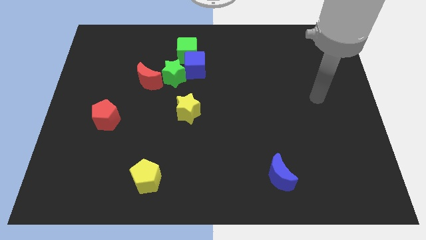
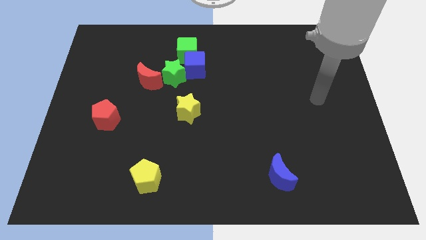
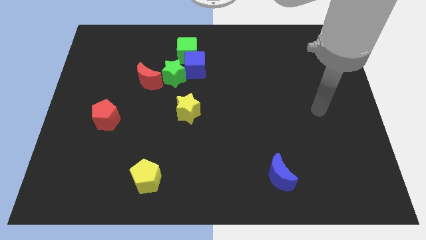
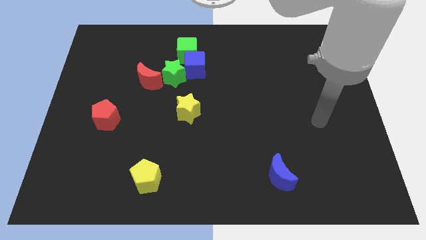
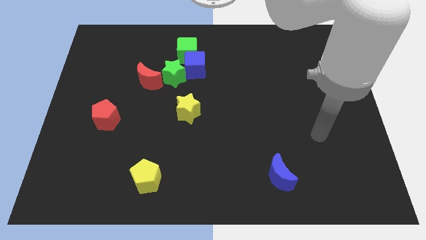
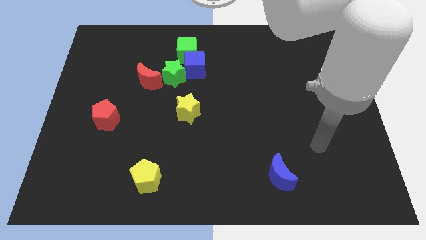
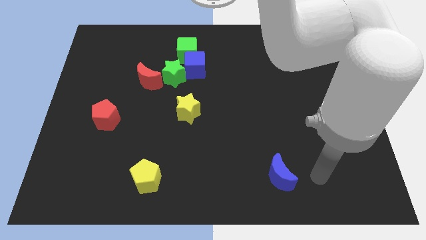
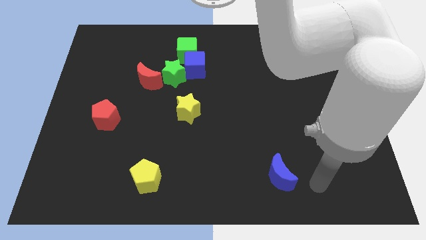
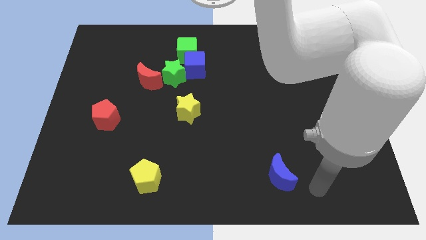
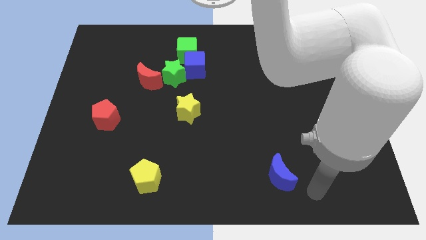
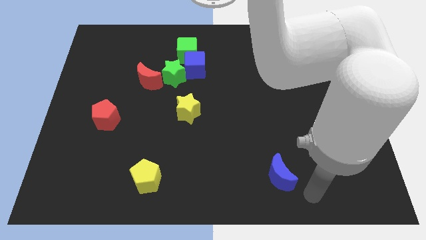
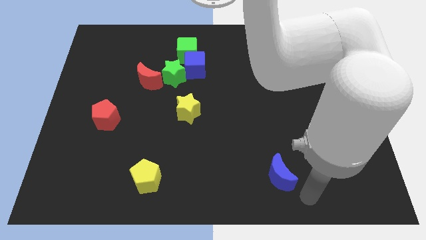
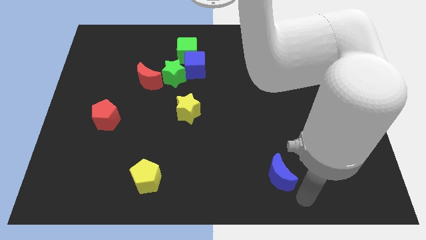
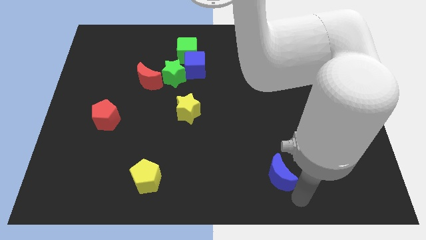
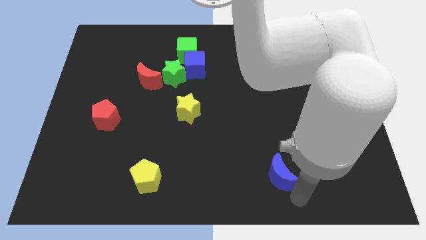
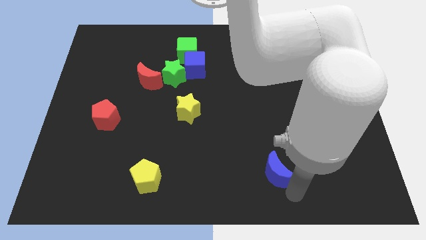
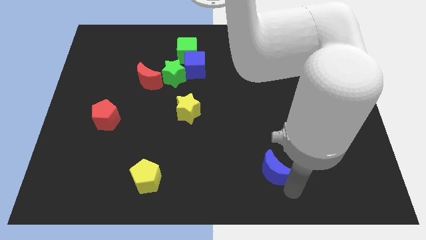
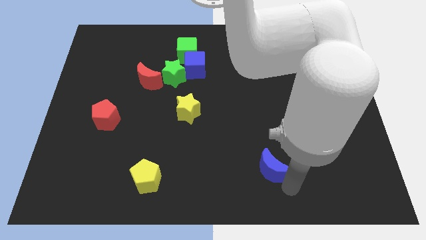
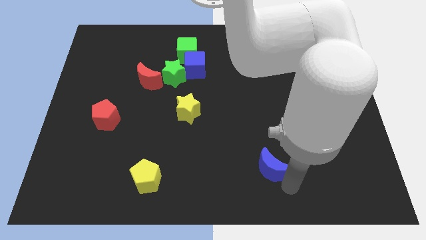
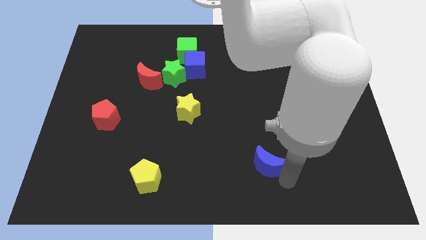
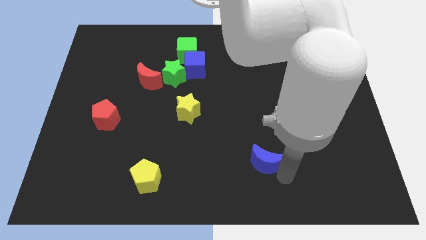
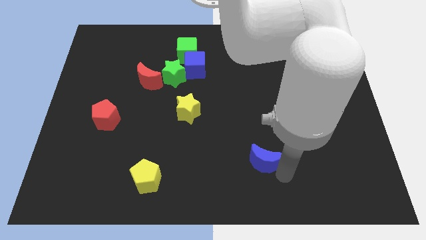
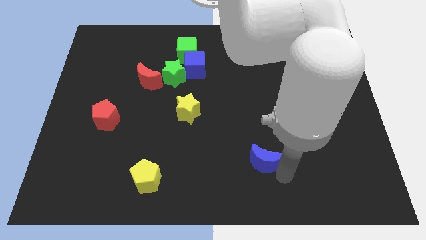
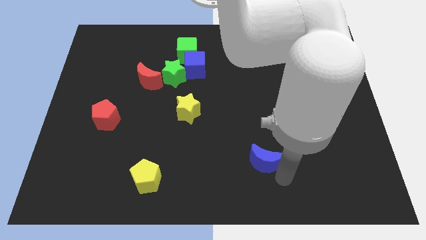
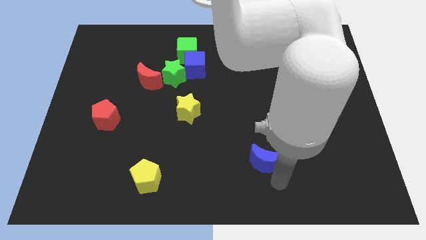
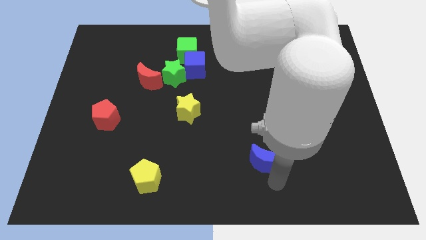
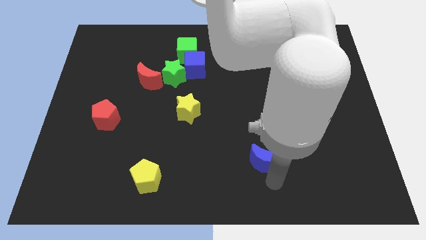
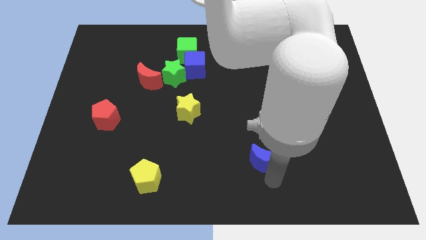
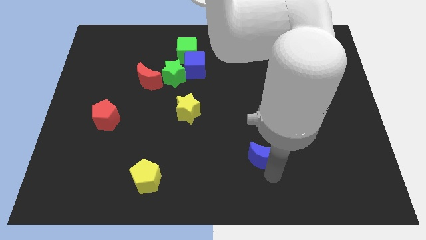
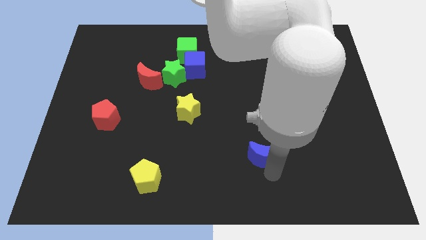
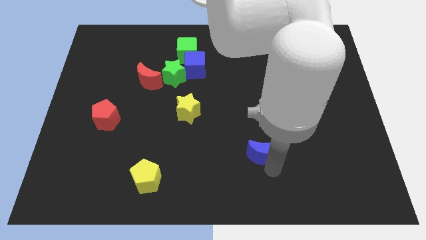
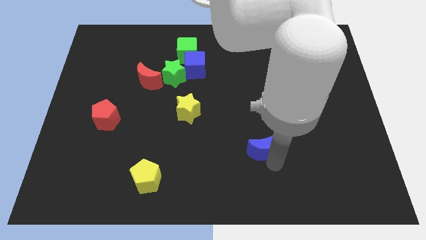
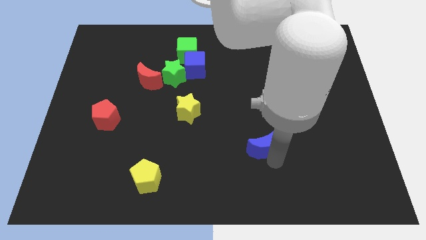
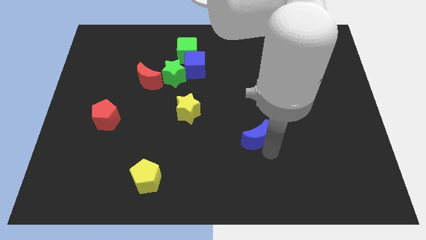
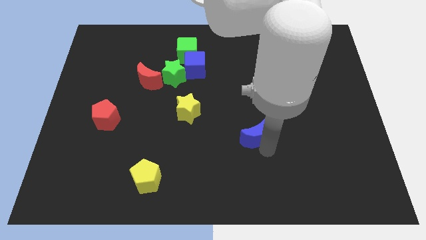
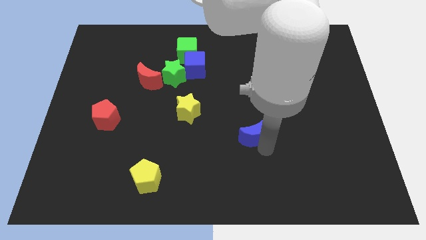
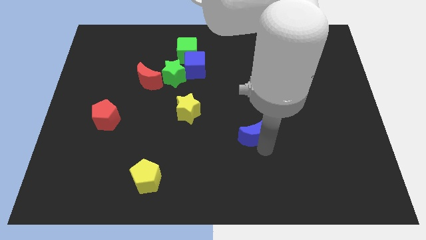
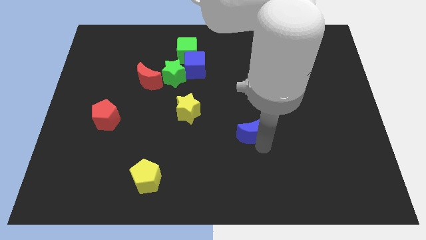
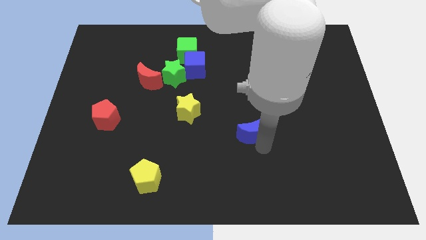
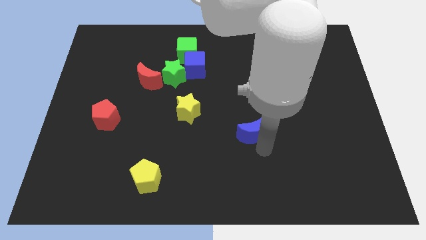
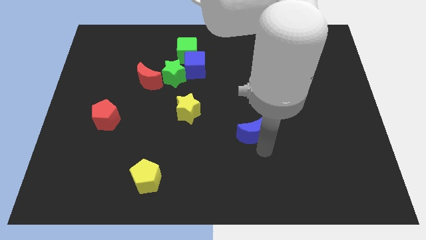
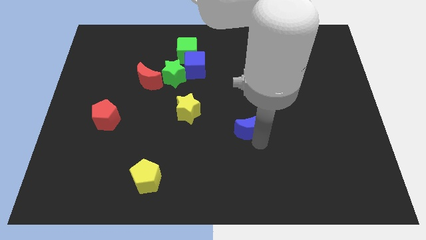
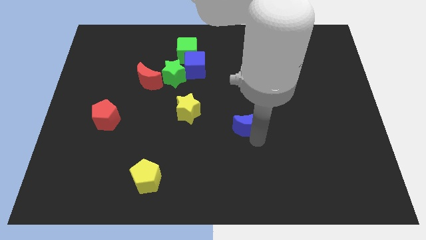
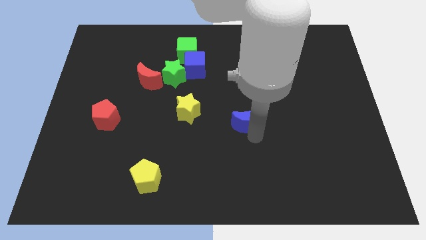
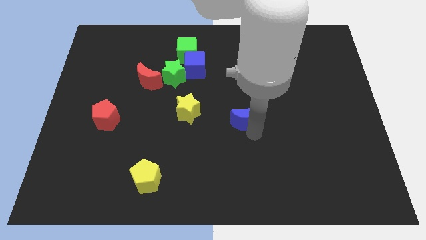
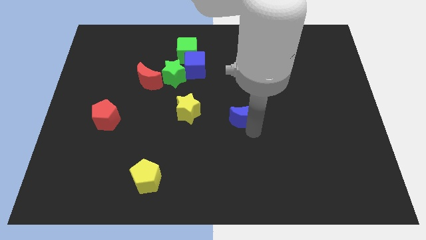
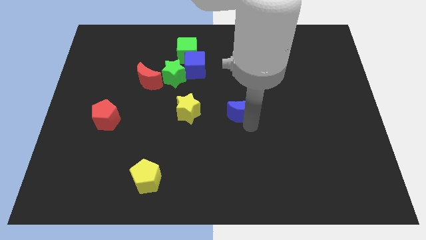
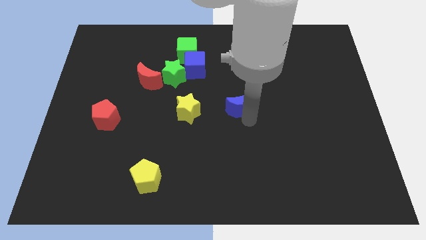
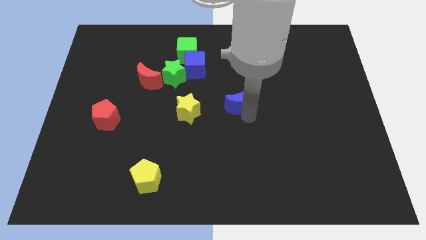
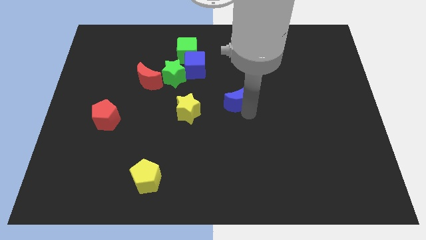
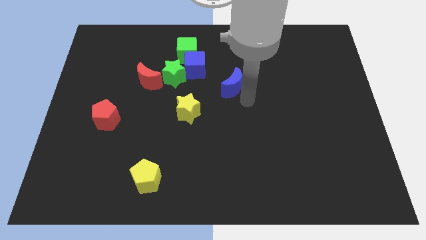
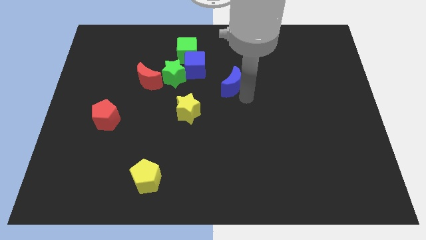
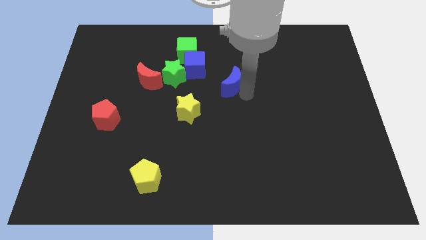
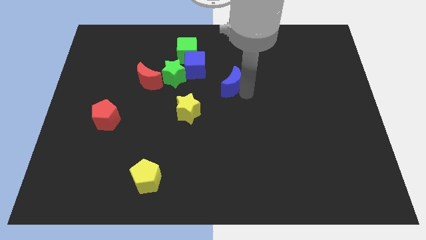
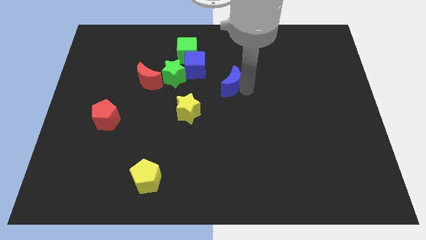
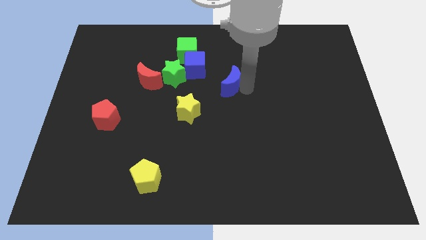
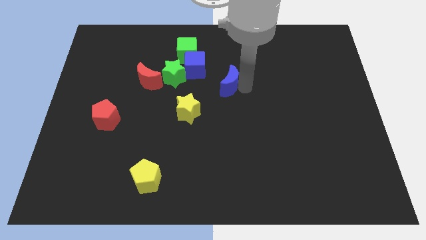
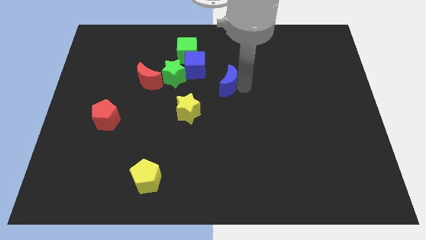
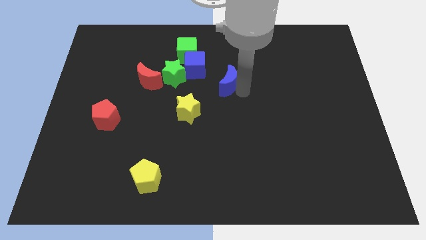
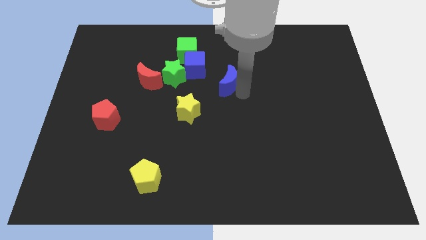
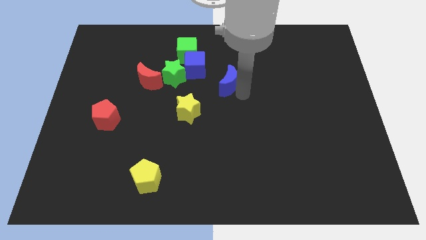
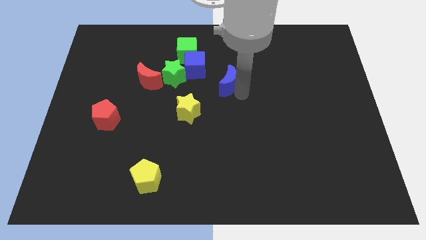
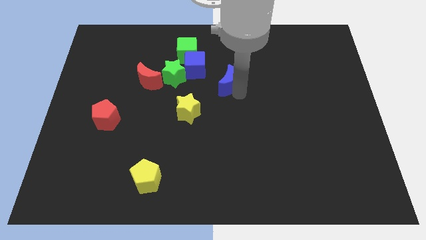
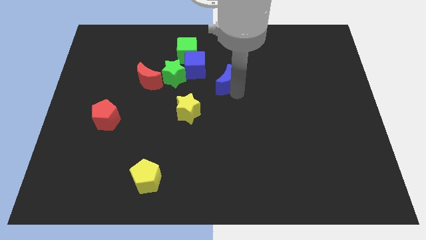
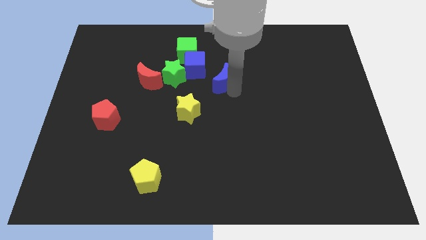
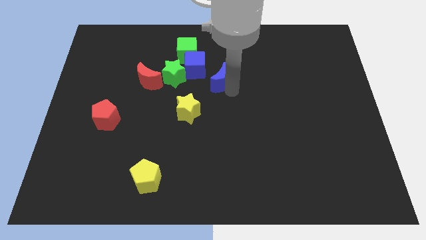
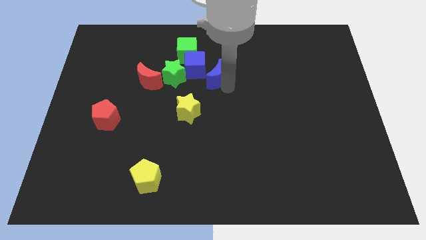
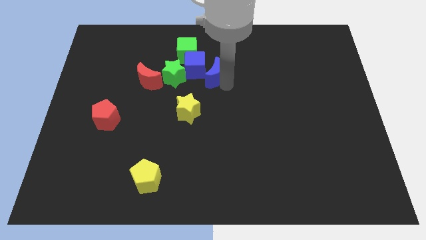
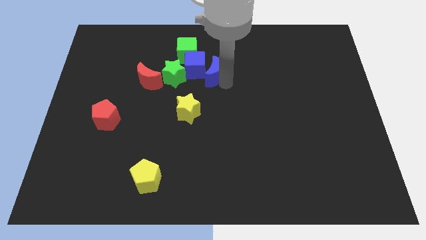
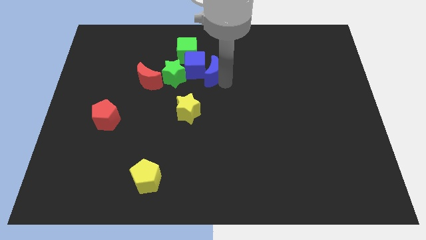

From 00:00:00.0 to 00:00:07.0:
move the blue moon towards the blue cube

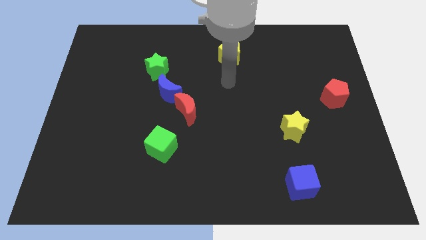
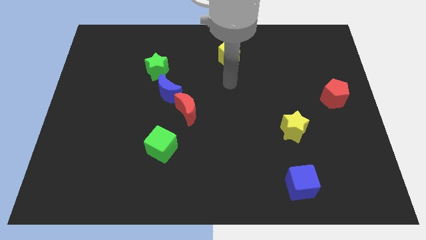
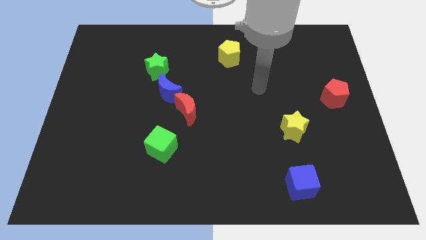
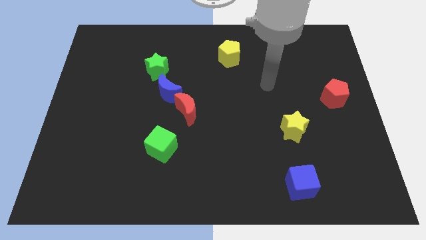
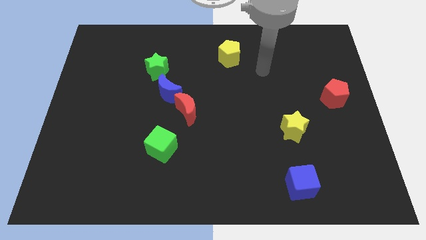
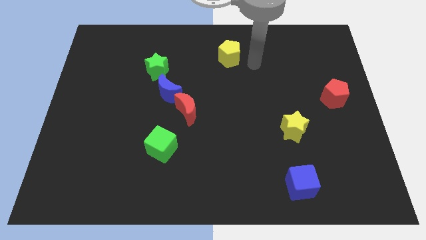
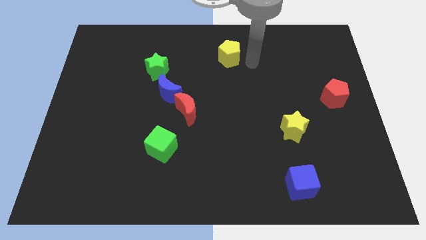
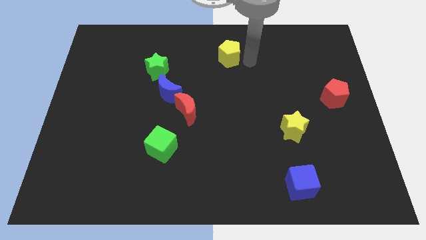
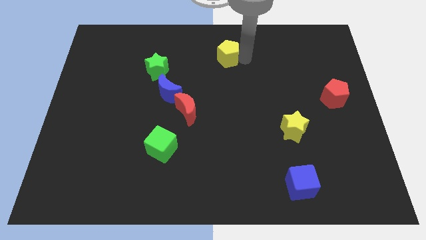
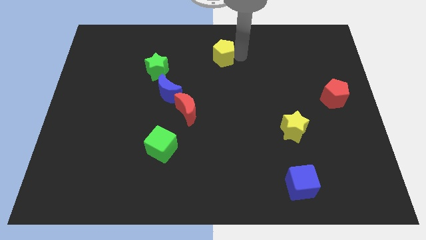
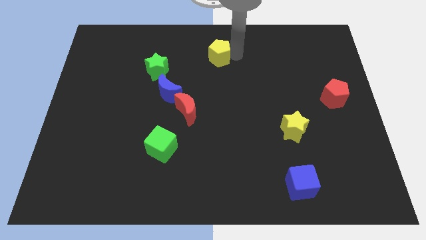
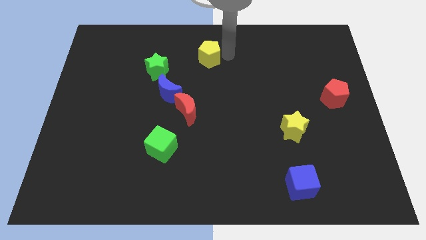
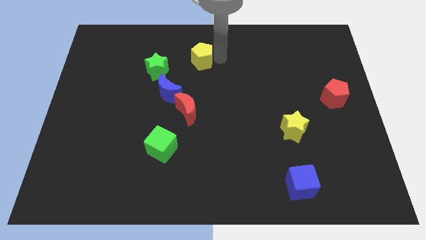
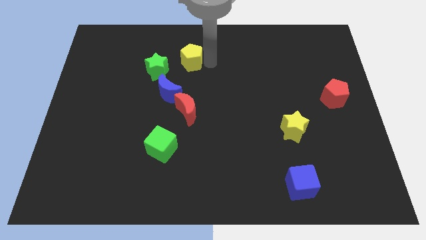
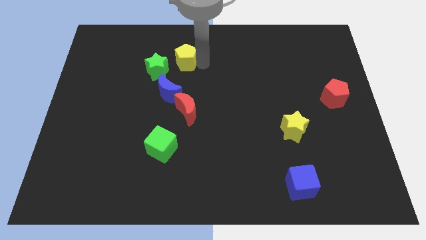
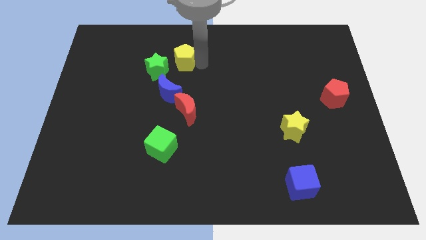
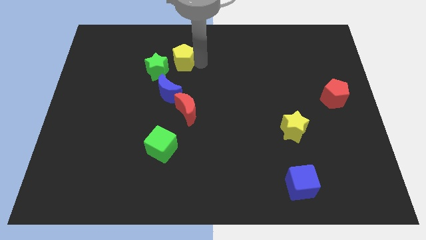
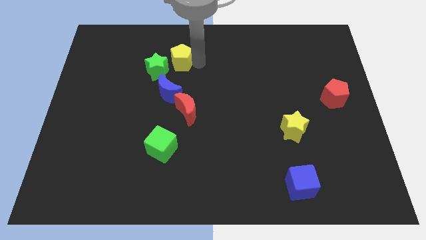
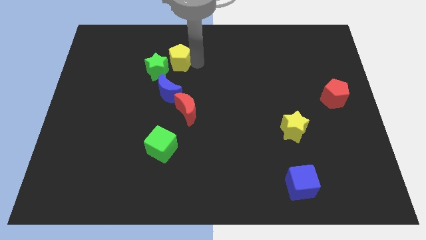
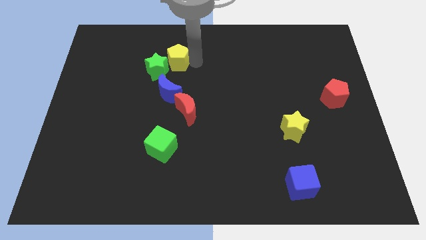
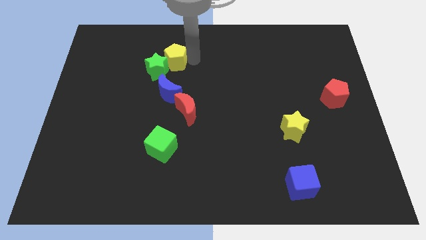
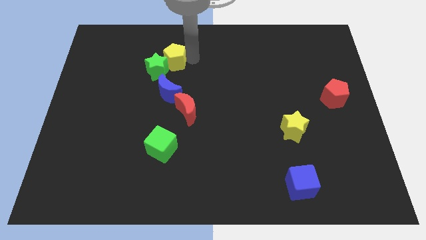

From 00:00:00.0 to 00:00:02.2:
put the yellow pentagon to the green star
